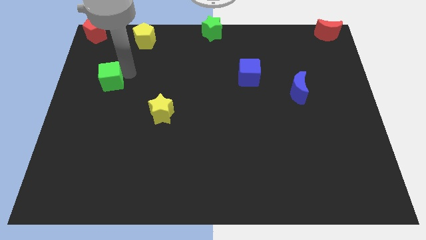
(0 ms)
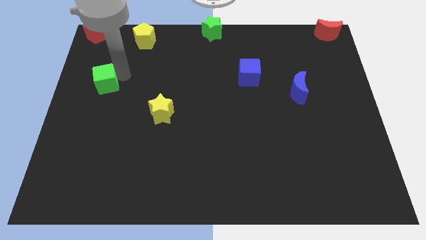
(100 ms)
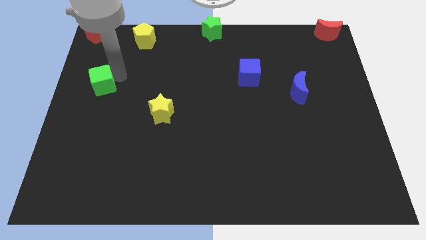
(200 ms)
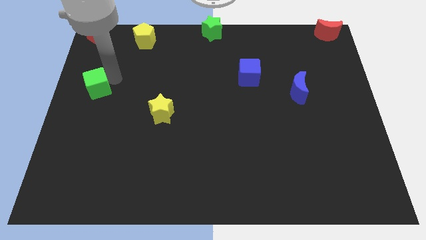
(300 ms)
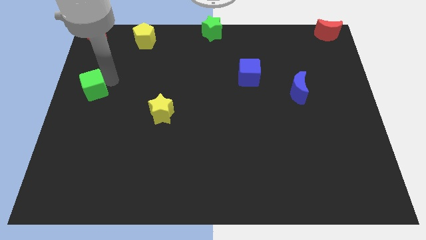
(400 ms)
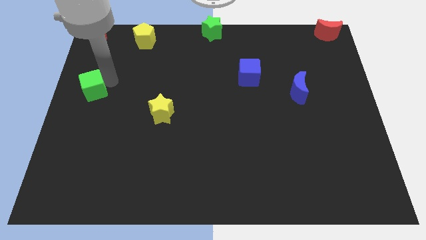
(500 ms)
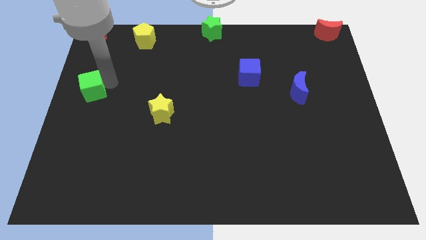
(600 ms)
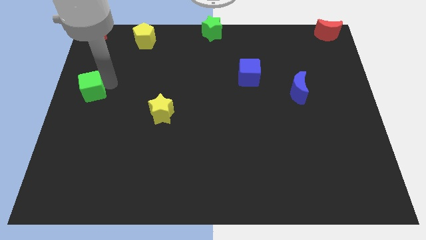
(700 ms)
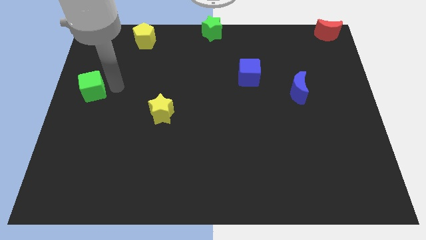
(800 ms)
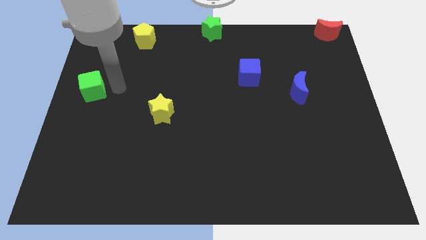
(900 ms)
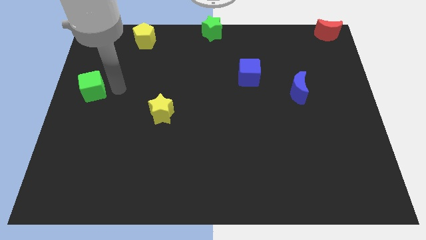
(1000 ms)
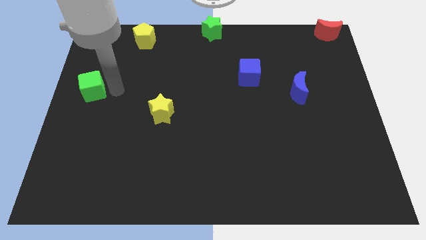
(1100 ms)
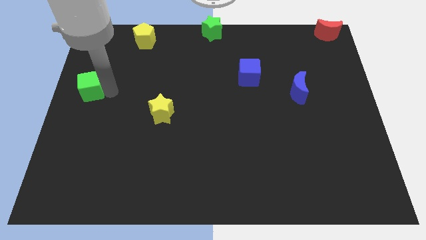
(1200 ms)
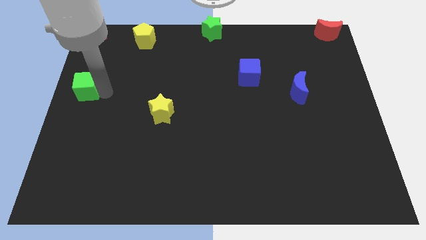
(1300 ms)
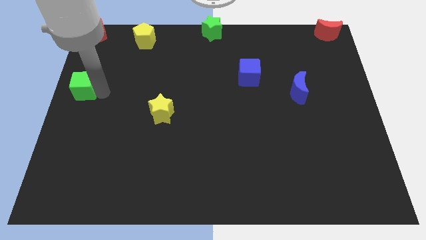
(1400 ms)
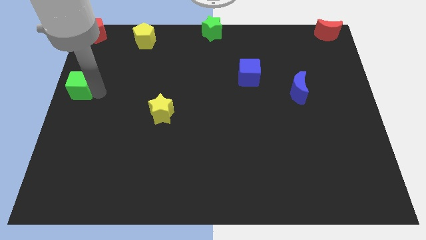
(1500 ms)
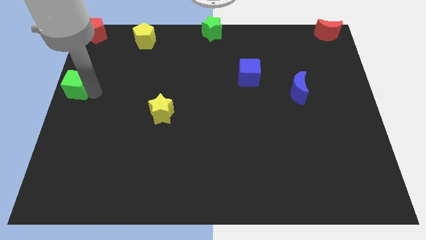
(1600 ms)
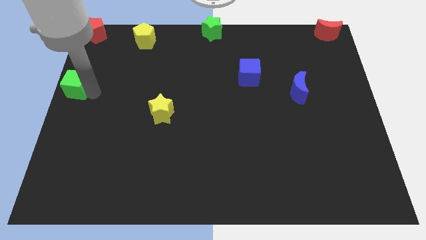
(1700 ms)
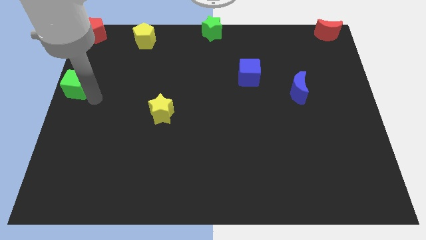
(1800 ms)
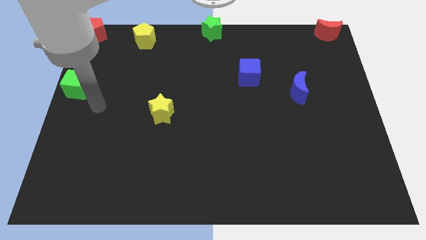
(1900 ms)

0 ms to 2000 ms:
move green cube to the left of the board

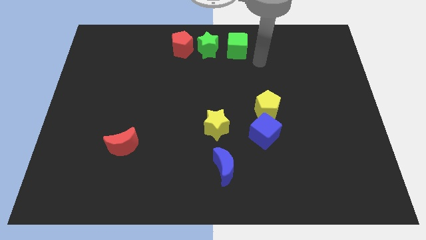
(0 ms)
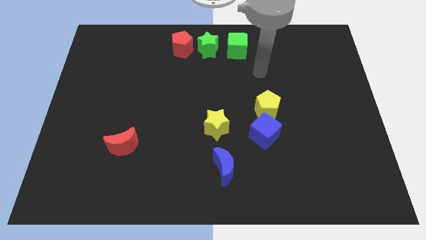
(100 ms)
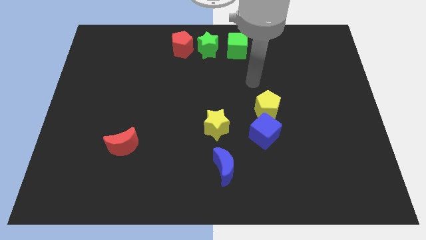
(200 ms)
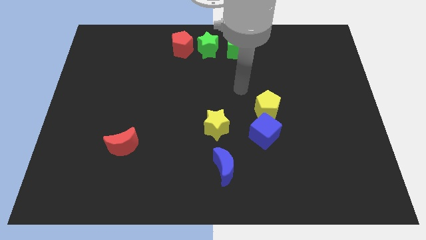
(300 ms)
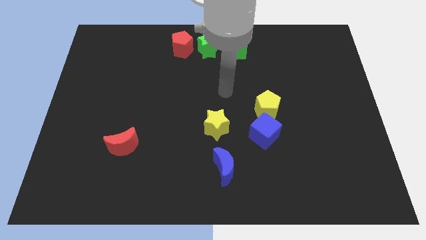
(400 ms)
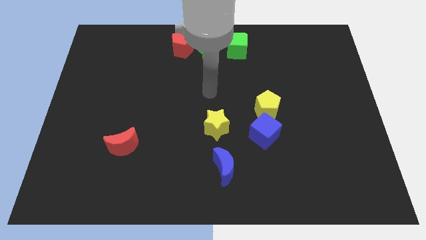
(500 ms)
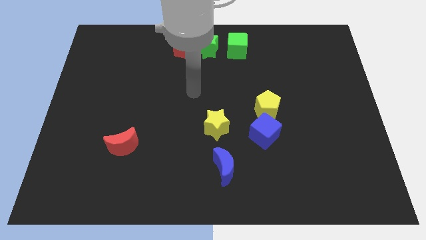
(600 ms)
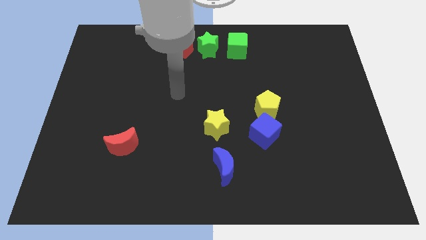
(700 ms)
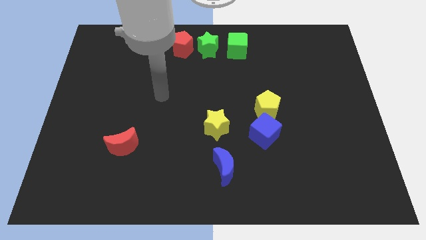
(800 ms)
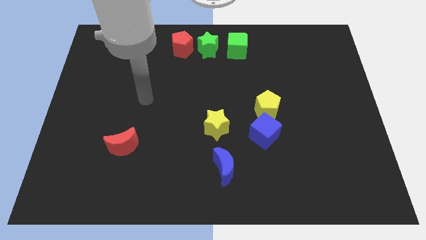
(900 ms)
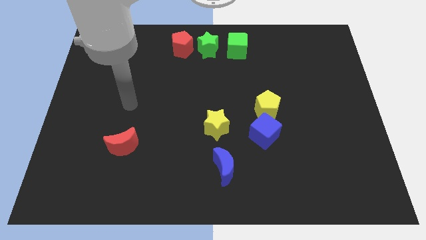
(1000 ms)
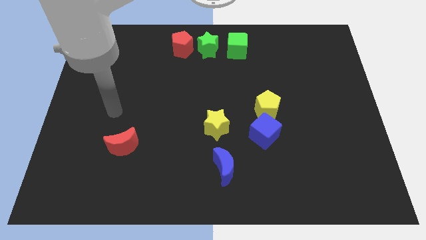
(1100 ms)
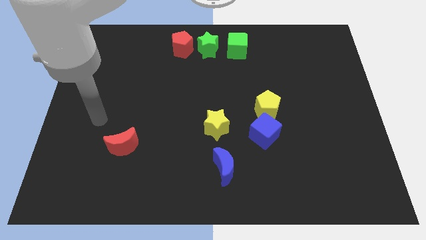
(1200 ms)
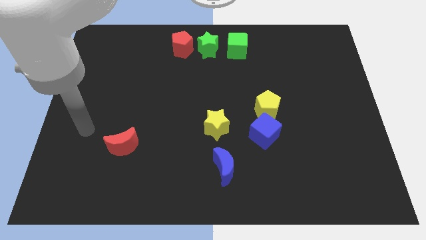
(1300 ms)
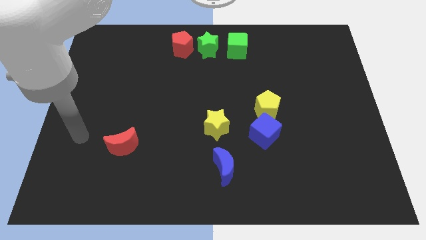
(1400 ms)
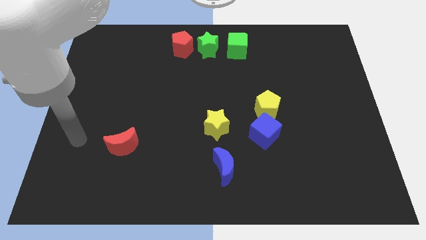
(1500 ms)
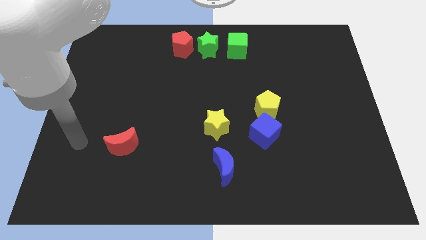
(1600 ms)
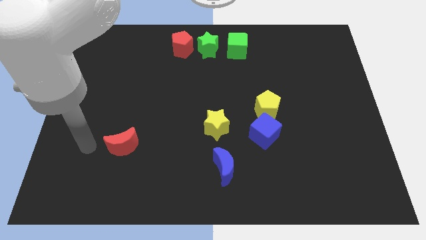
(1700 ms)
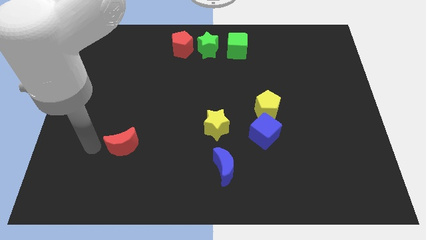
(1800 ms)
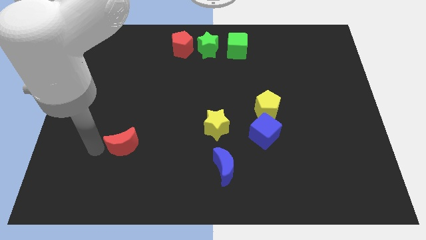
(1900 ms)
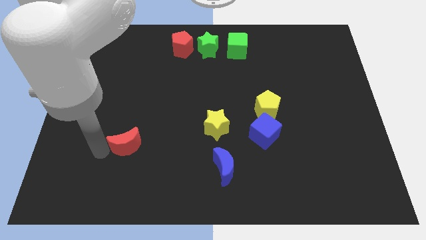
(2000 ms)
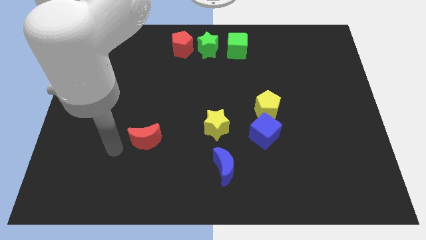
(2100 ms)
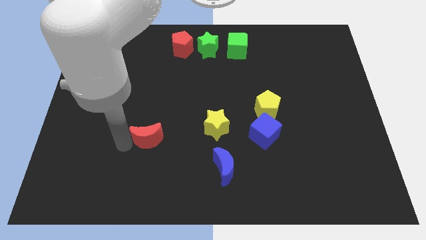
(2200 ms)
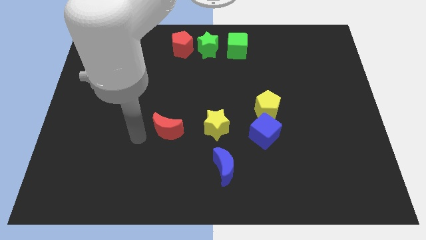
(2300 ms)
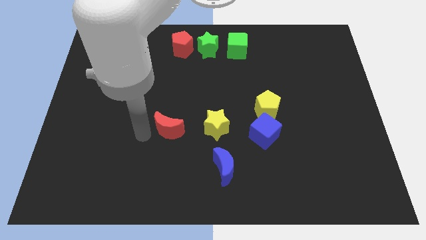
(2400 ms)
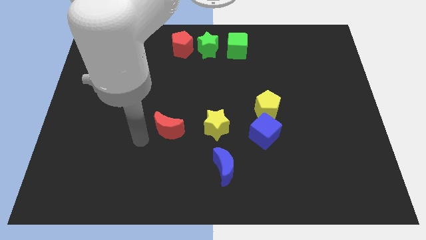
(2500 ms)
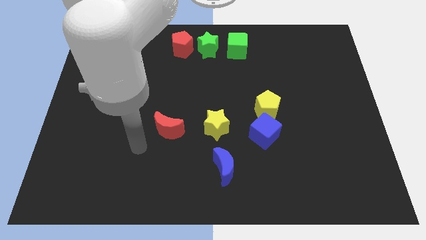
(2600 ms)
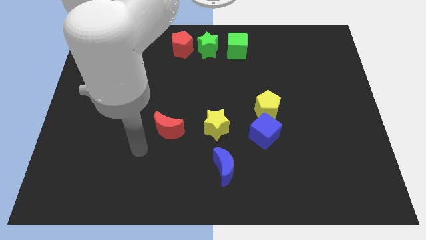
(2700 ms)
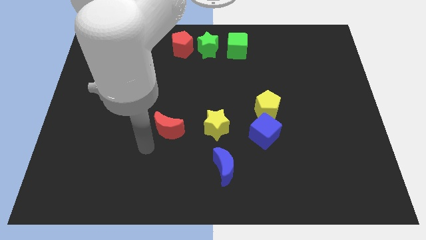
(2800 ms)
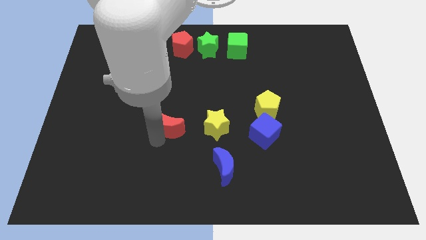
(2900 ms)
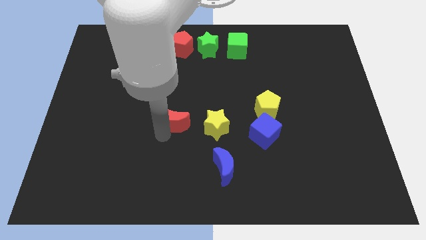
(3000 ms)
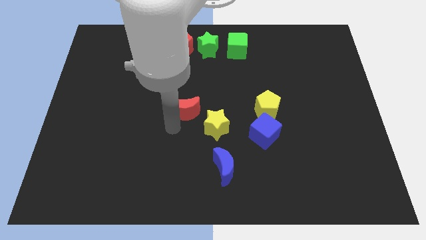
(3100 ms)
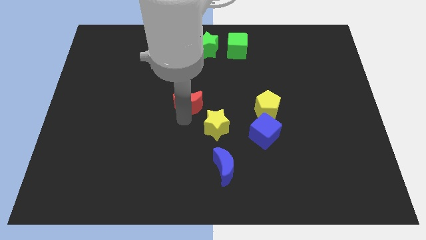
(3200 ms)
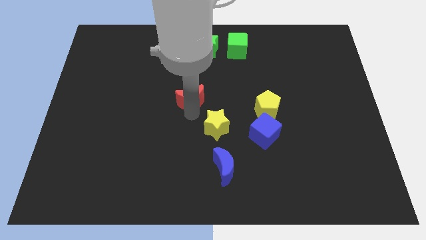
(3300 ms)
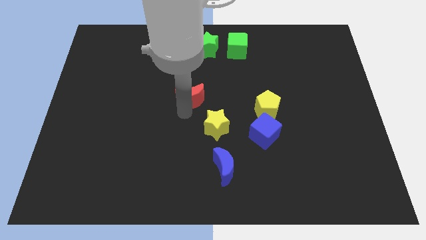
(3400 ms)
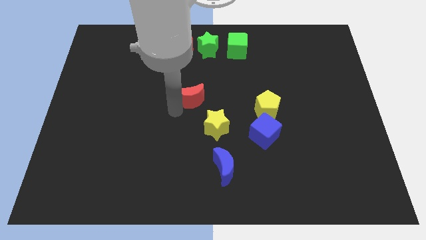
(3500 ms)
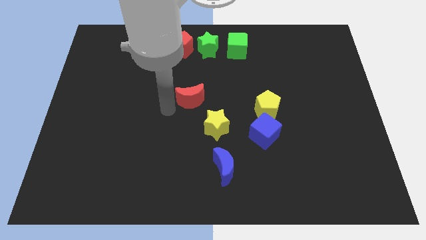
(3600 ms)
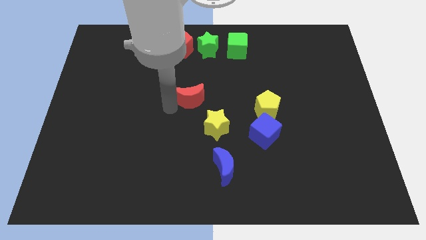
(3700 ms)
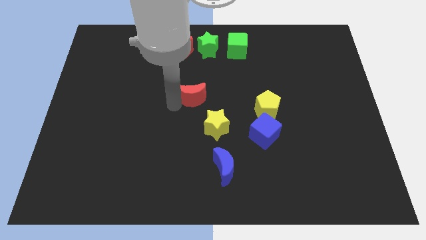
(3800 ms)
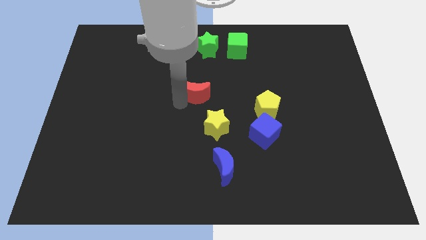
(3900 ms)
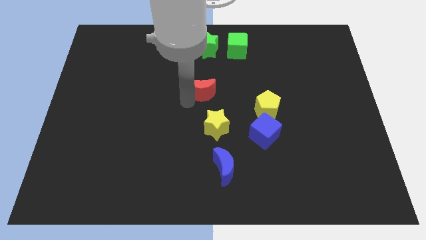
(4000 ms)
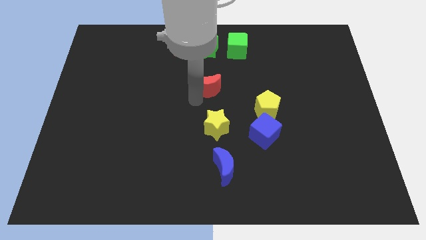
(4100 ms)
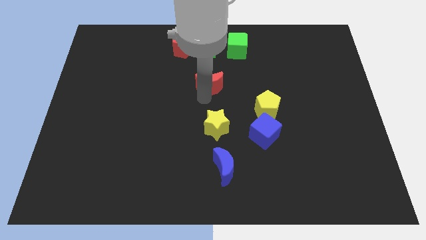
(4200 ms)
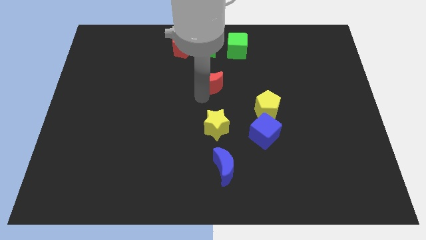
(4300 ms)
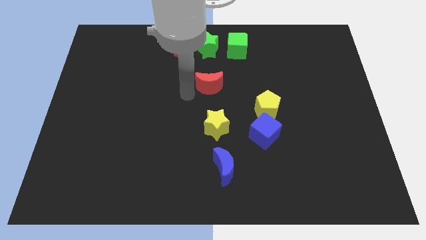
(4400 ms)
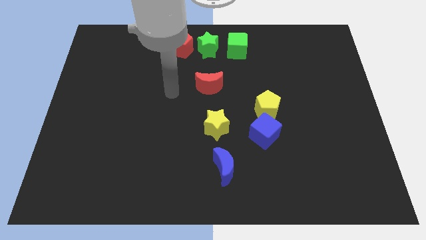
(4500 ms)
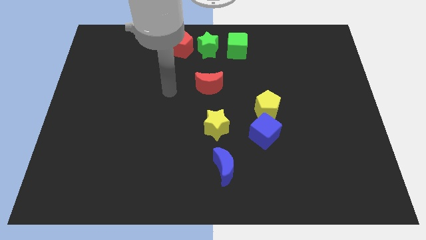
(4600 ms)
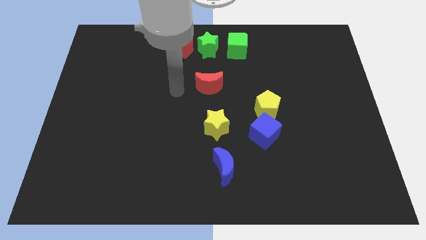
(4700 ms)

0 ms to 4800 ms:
place the red moon above the yellow star

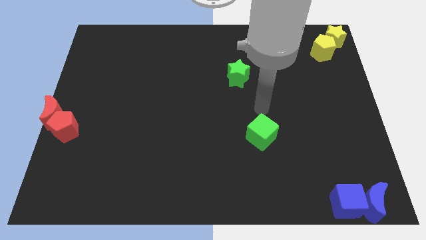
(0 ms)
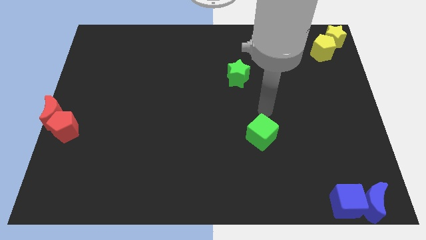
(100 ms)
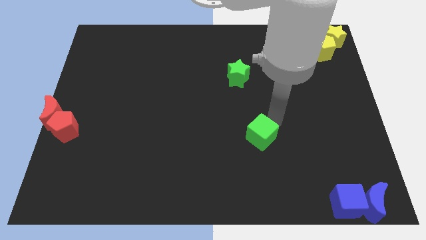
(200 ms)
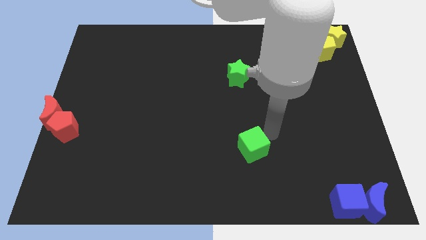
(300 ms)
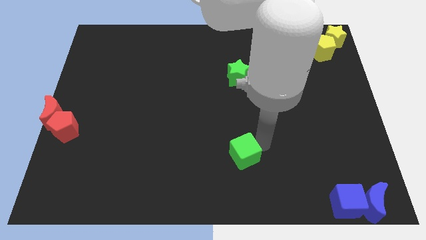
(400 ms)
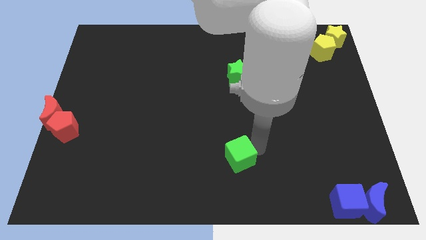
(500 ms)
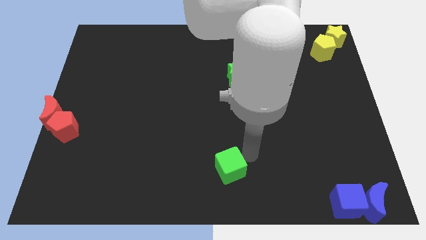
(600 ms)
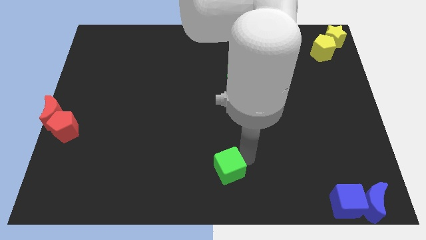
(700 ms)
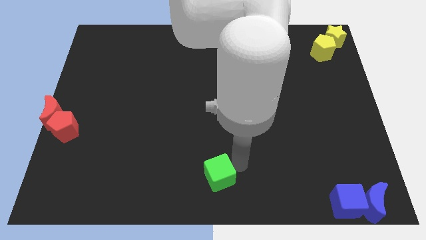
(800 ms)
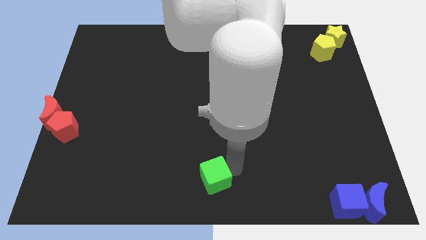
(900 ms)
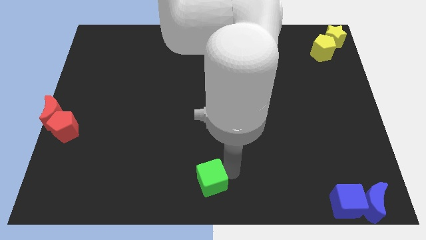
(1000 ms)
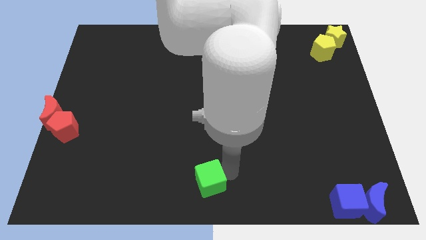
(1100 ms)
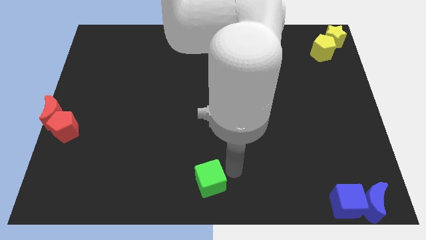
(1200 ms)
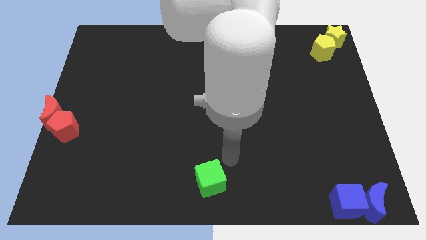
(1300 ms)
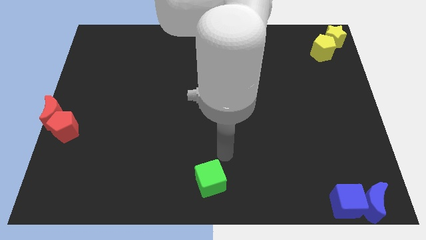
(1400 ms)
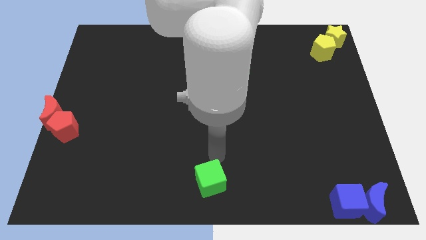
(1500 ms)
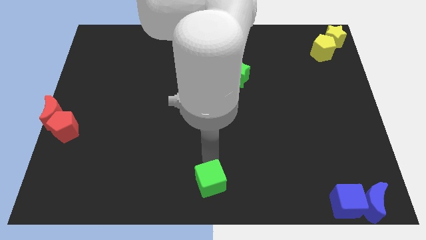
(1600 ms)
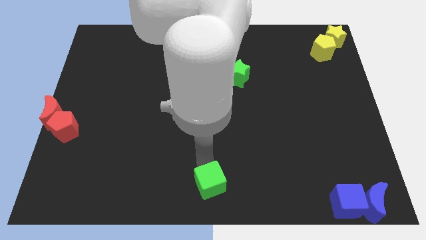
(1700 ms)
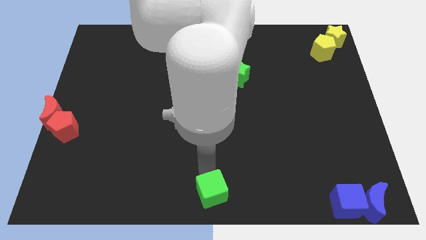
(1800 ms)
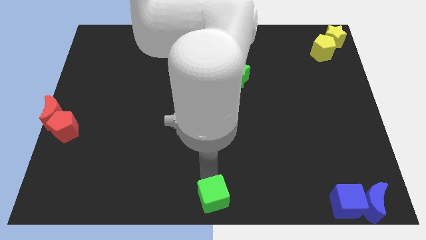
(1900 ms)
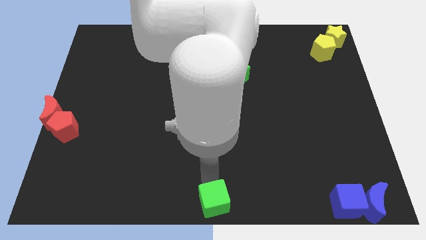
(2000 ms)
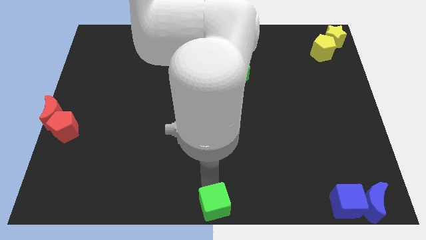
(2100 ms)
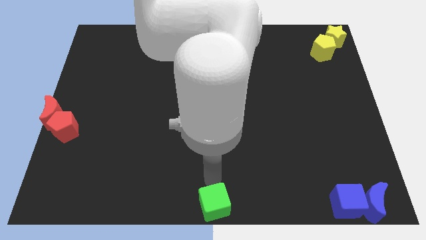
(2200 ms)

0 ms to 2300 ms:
move the green cube to the bottom center
